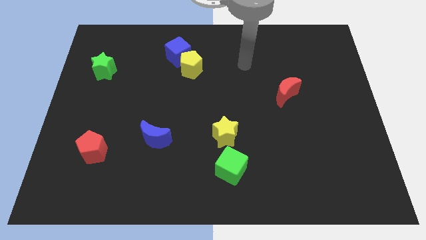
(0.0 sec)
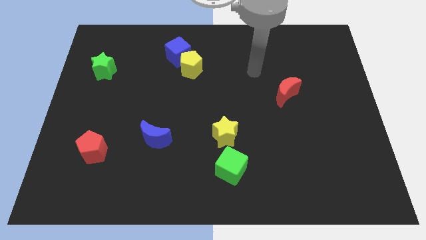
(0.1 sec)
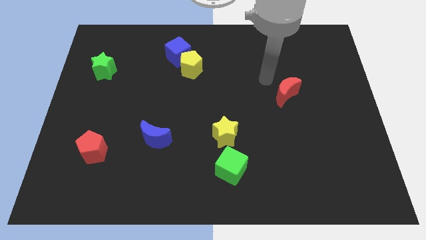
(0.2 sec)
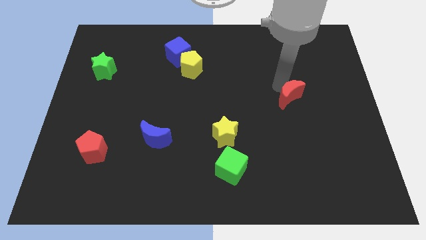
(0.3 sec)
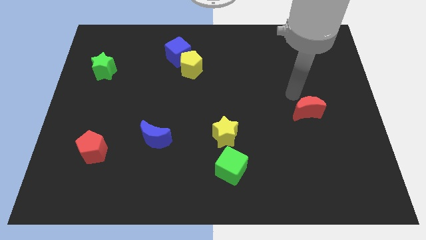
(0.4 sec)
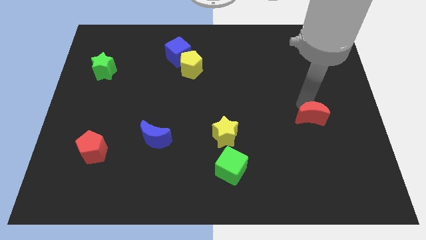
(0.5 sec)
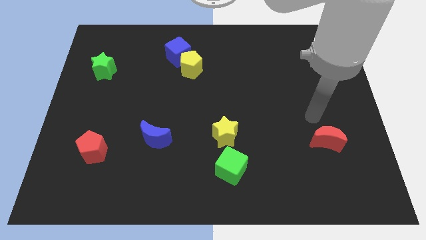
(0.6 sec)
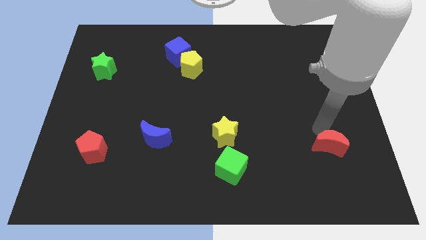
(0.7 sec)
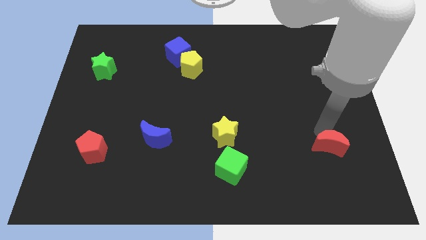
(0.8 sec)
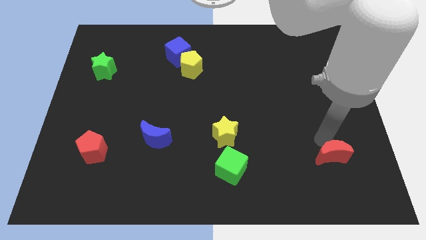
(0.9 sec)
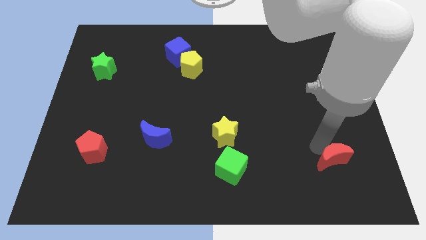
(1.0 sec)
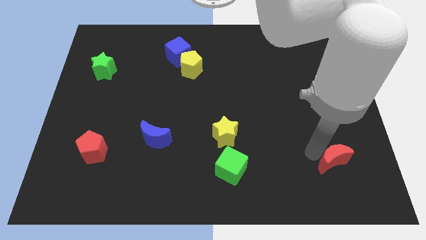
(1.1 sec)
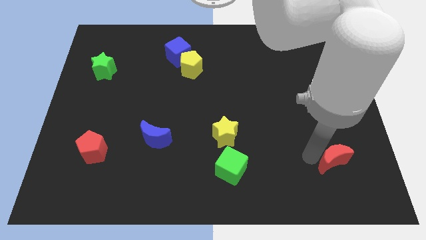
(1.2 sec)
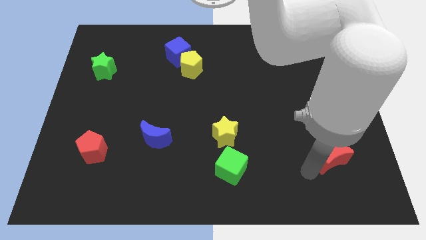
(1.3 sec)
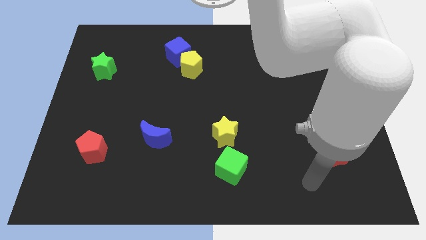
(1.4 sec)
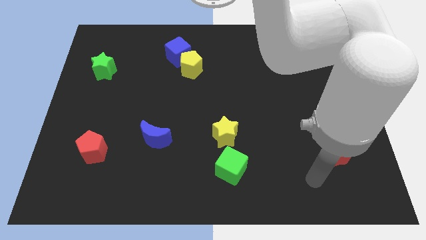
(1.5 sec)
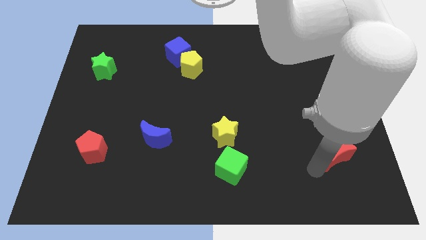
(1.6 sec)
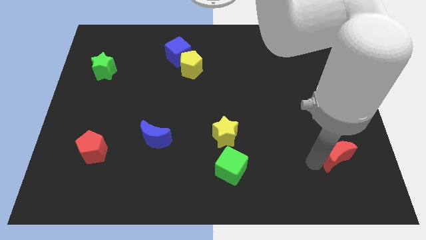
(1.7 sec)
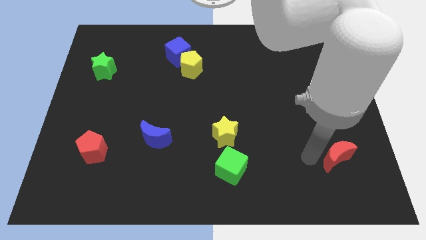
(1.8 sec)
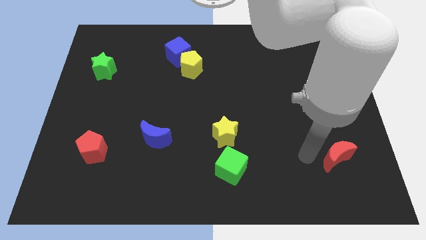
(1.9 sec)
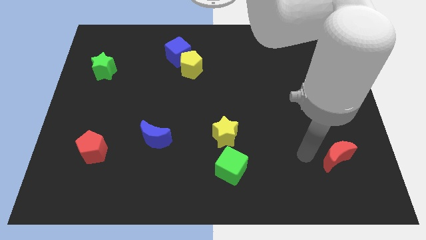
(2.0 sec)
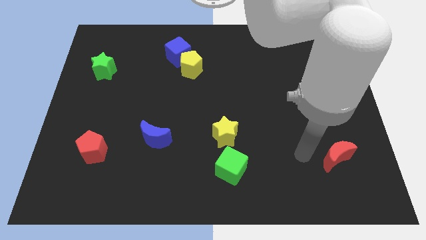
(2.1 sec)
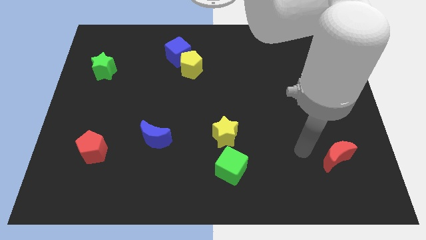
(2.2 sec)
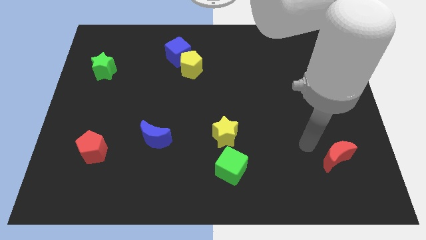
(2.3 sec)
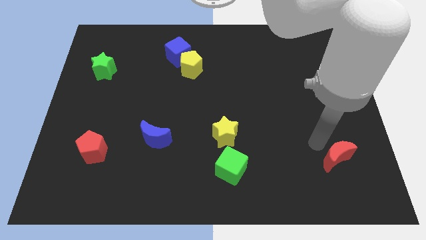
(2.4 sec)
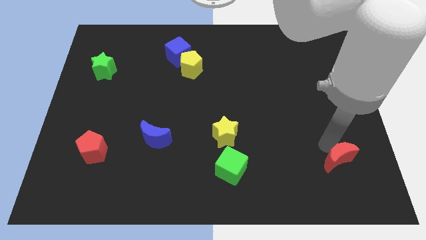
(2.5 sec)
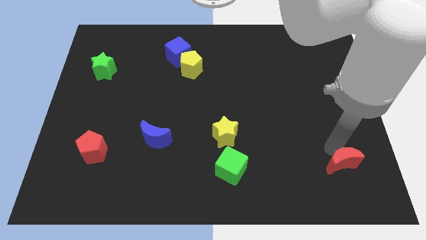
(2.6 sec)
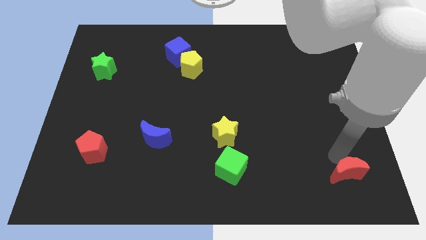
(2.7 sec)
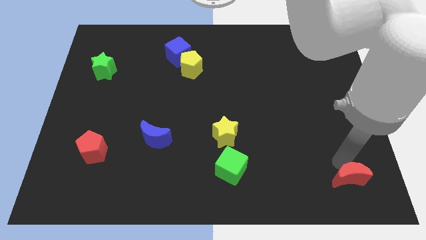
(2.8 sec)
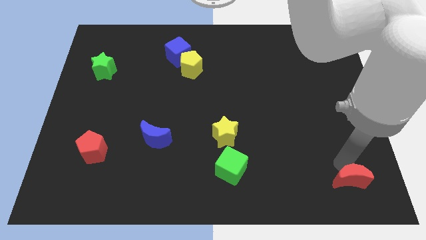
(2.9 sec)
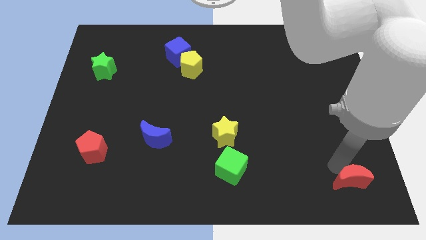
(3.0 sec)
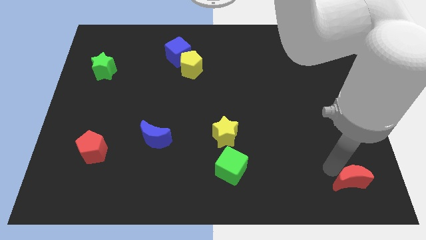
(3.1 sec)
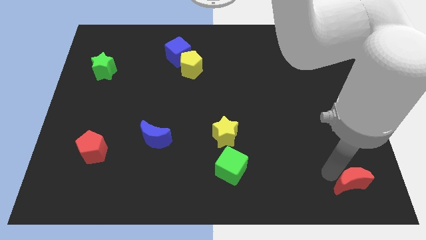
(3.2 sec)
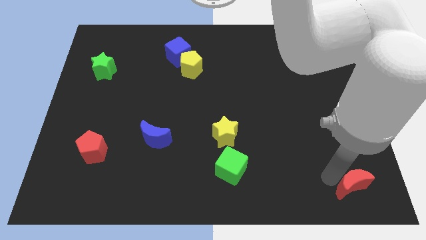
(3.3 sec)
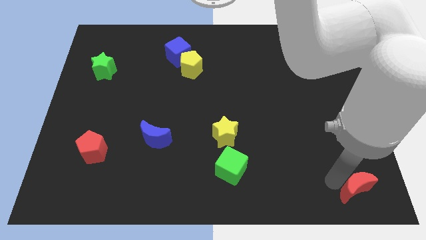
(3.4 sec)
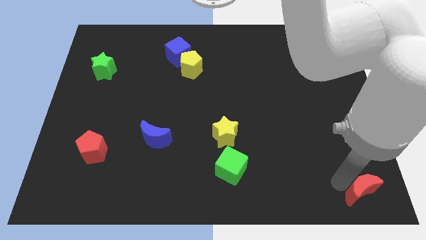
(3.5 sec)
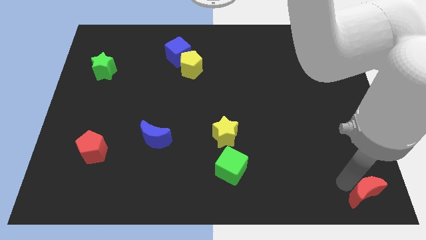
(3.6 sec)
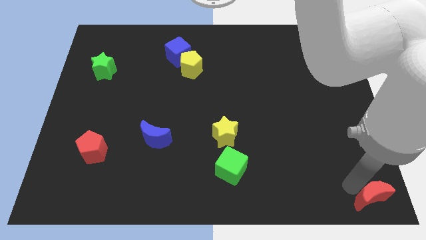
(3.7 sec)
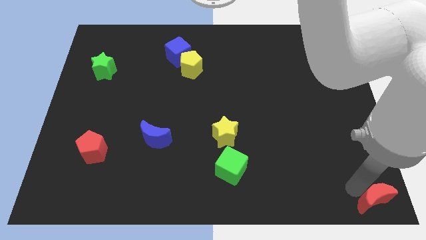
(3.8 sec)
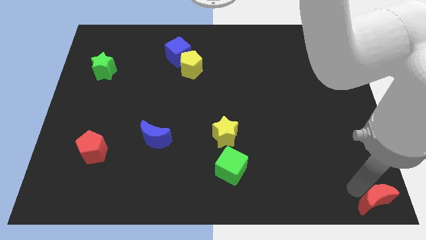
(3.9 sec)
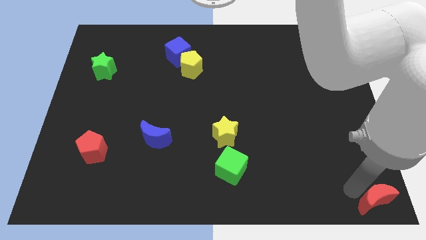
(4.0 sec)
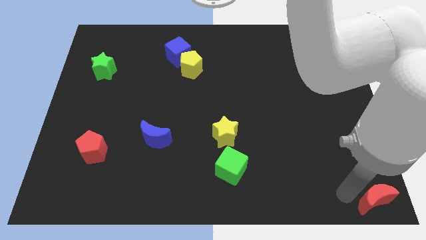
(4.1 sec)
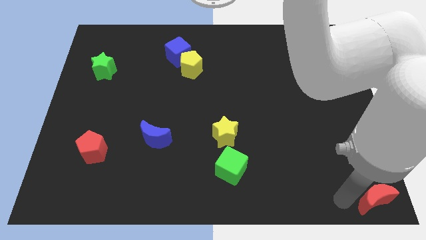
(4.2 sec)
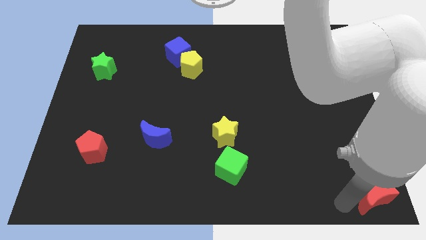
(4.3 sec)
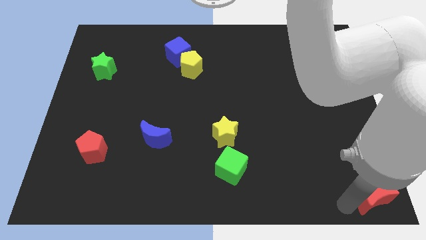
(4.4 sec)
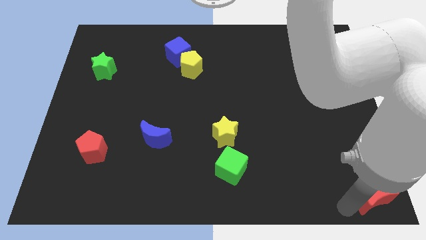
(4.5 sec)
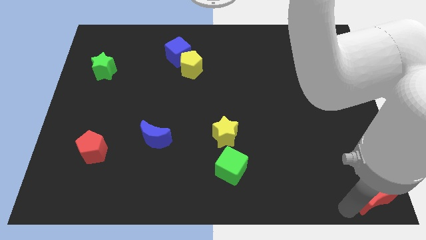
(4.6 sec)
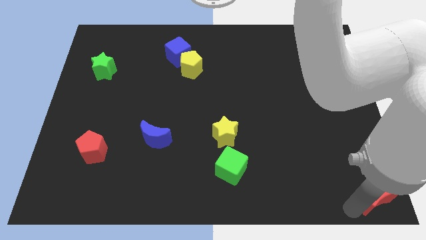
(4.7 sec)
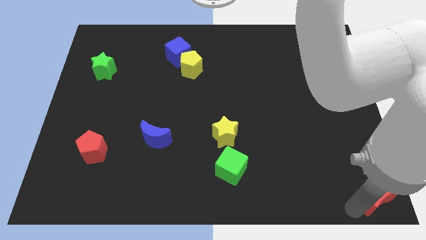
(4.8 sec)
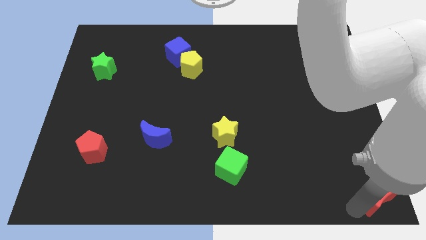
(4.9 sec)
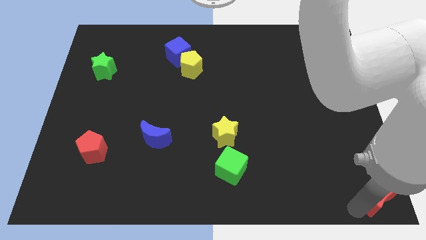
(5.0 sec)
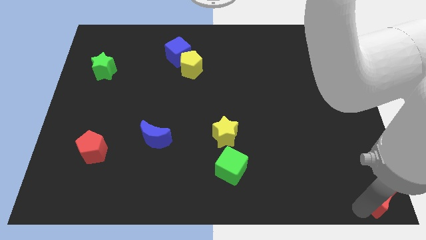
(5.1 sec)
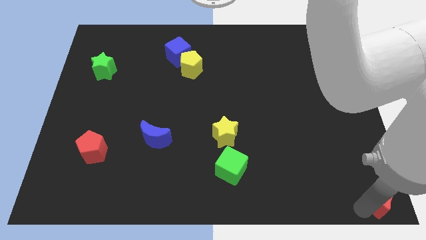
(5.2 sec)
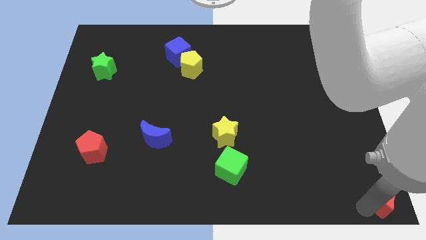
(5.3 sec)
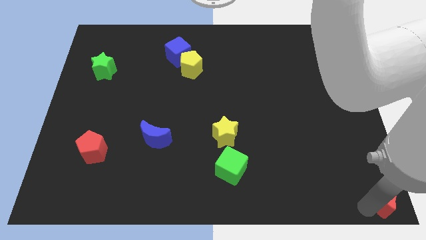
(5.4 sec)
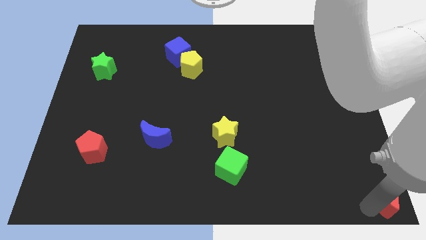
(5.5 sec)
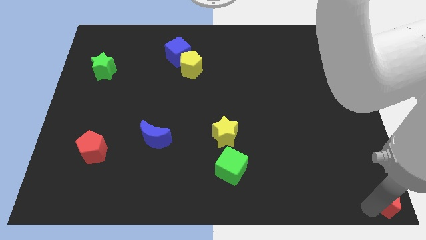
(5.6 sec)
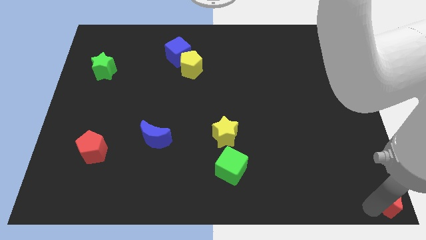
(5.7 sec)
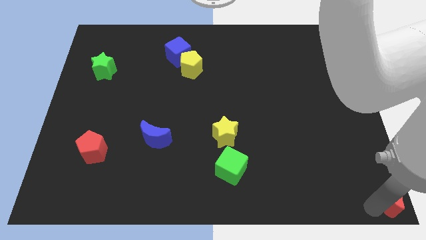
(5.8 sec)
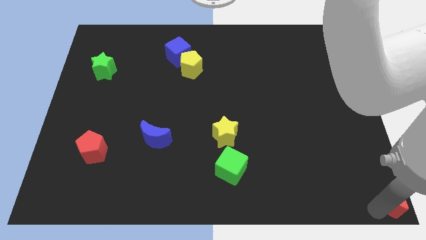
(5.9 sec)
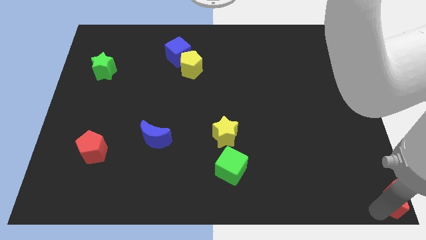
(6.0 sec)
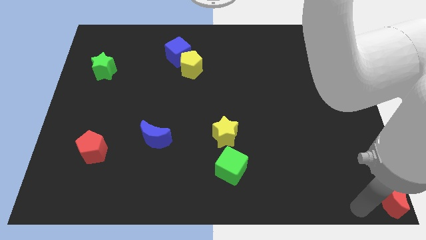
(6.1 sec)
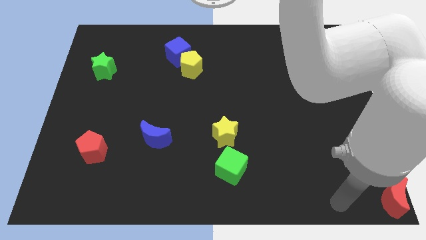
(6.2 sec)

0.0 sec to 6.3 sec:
move the red moon to the bottom right corner

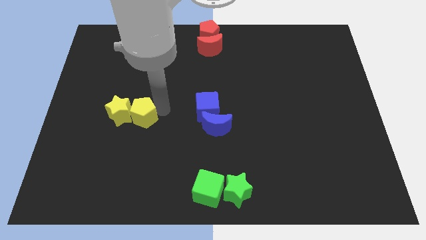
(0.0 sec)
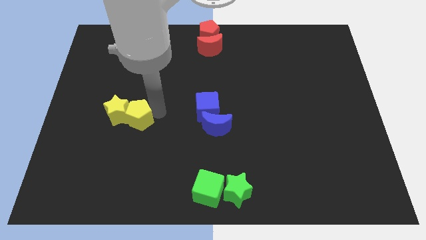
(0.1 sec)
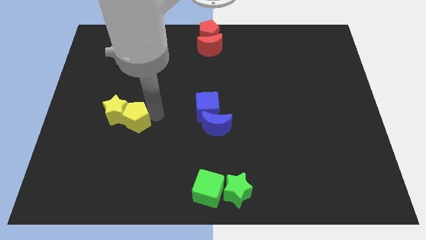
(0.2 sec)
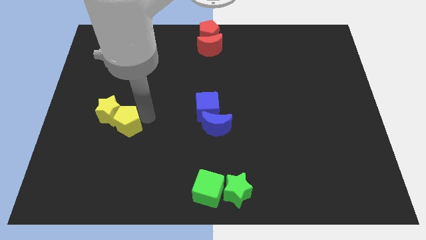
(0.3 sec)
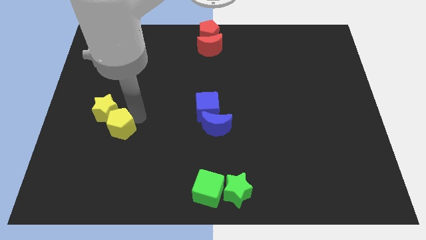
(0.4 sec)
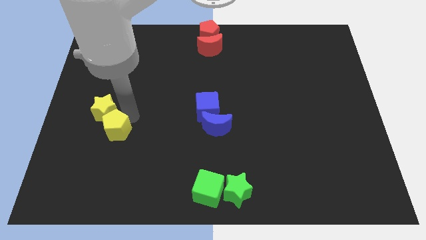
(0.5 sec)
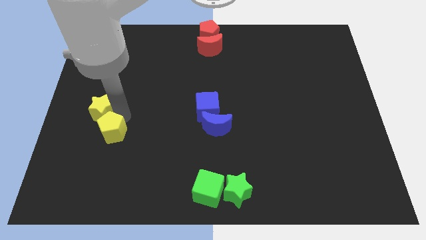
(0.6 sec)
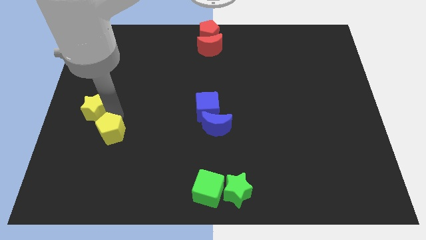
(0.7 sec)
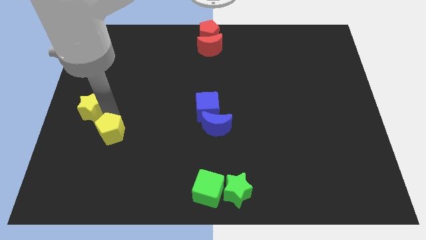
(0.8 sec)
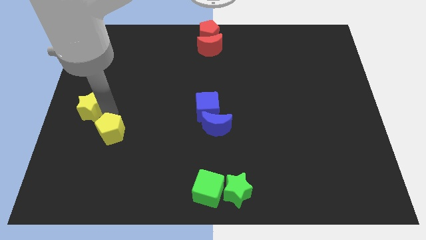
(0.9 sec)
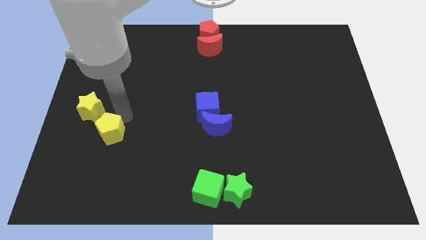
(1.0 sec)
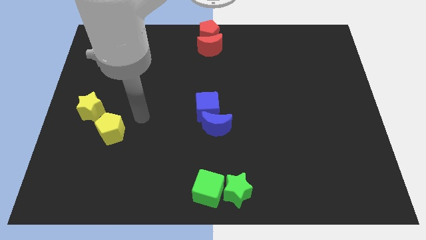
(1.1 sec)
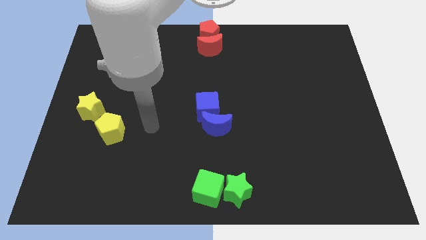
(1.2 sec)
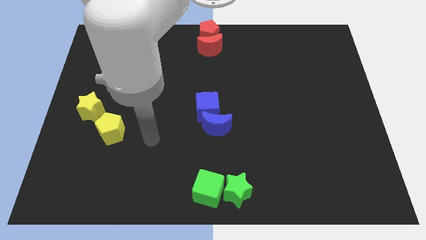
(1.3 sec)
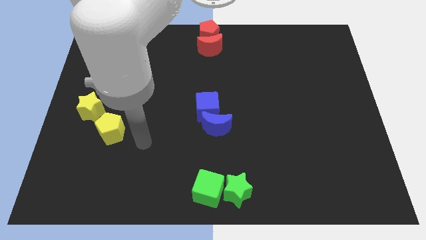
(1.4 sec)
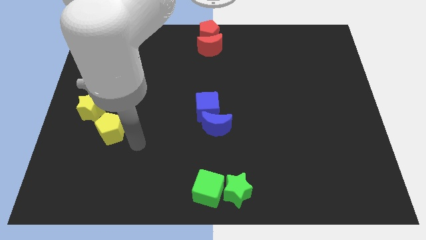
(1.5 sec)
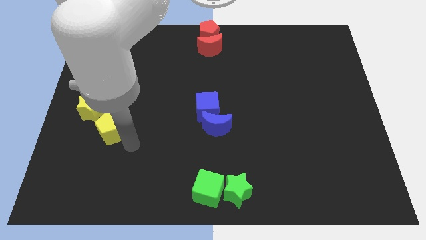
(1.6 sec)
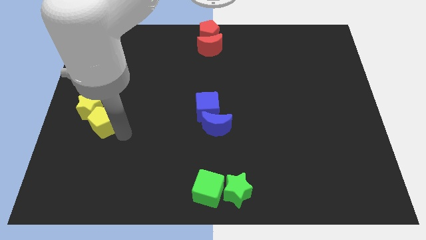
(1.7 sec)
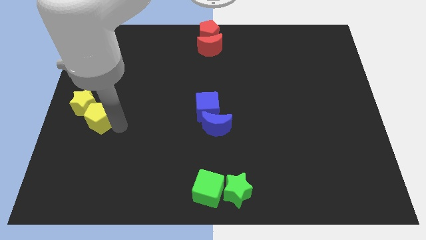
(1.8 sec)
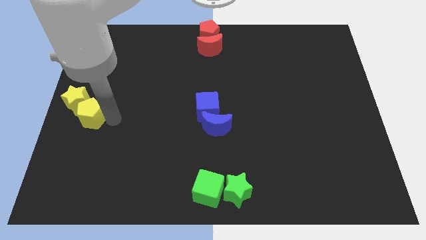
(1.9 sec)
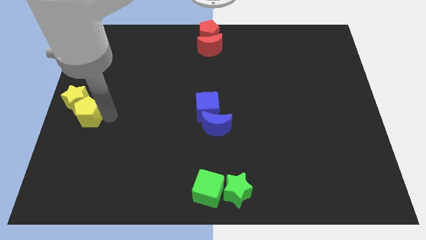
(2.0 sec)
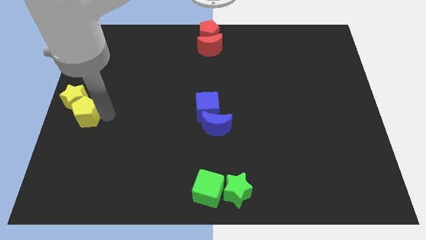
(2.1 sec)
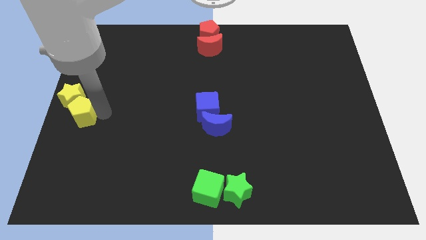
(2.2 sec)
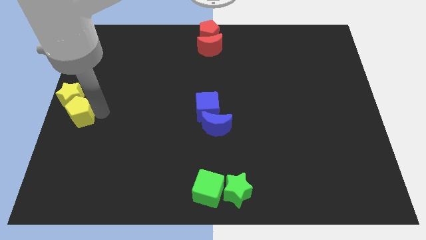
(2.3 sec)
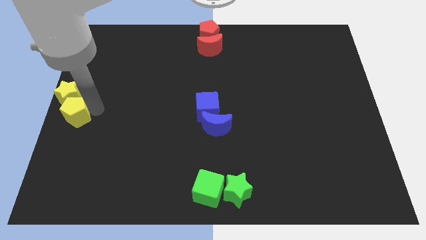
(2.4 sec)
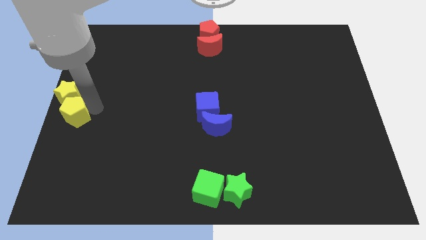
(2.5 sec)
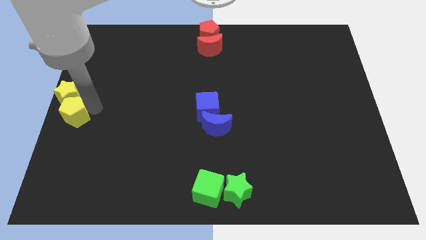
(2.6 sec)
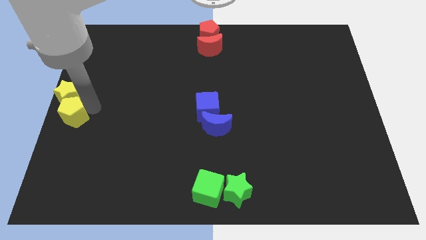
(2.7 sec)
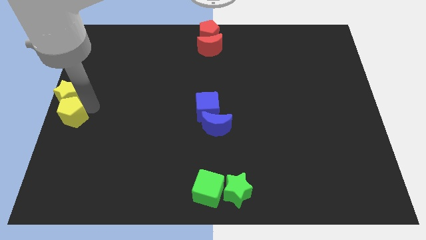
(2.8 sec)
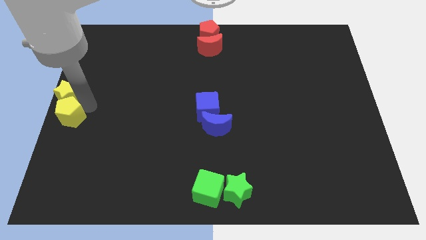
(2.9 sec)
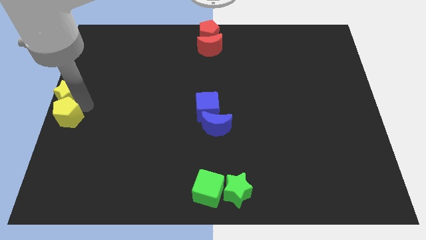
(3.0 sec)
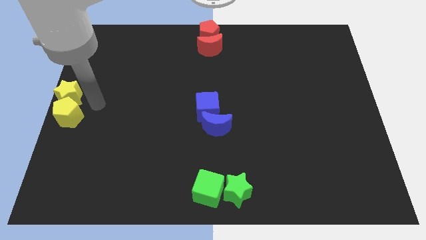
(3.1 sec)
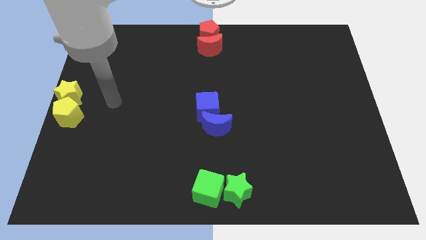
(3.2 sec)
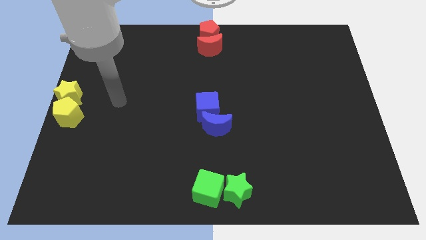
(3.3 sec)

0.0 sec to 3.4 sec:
put the yellow pentagon and yellow star to the center left side of the board
